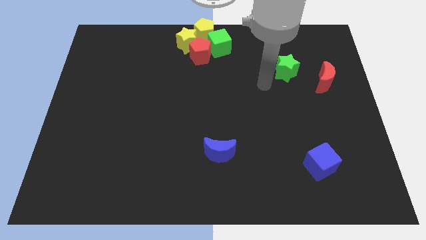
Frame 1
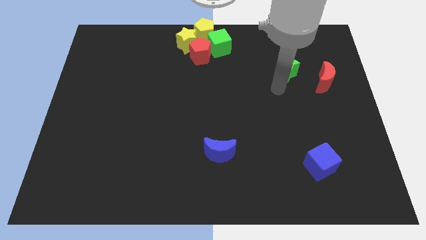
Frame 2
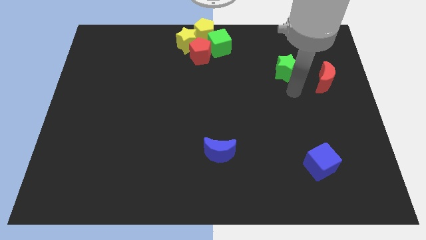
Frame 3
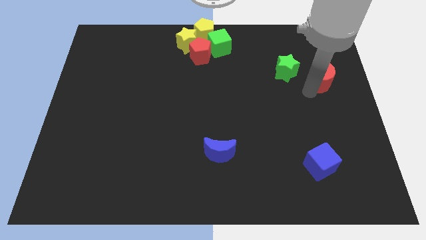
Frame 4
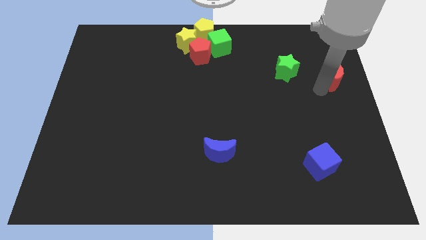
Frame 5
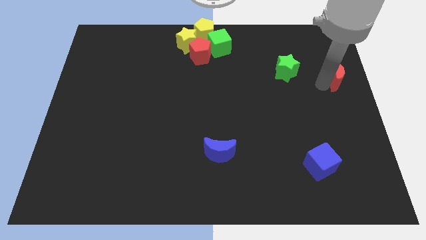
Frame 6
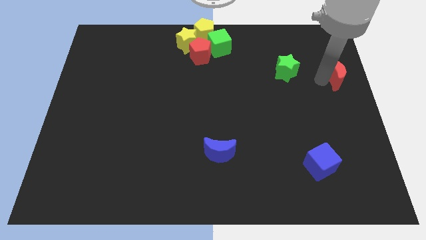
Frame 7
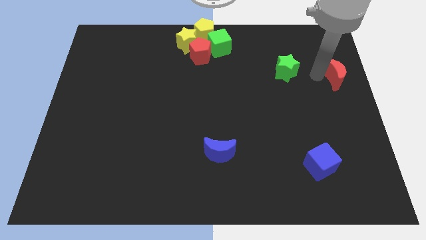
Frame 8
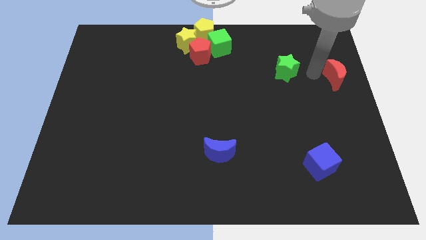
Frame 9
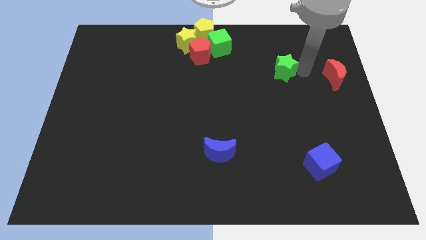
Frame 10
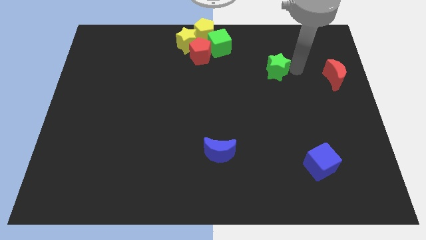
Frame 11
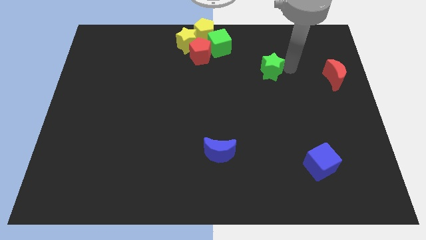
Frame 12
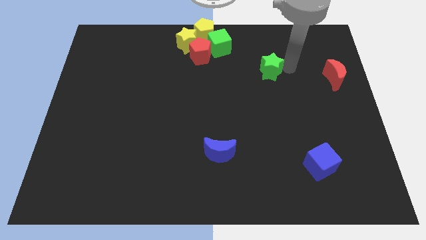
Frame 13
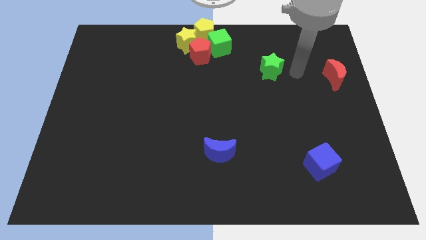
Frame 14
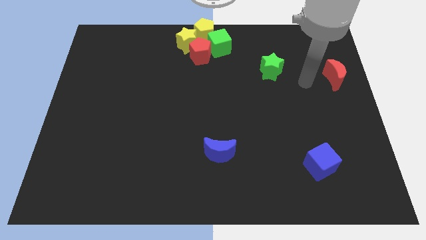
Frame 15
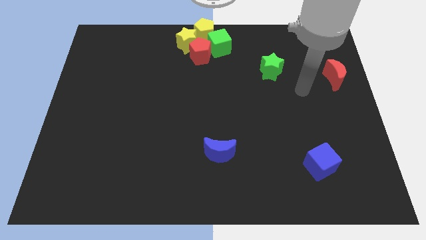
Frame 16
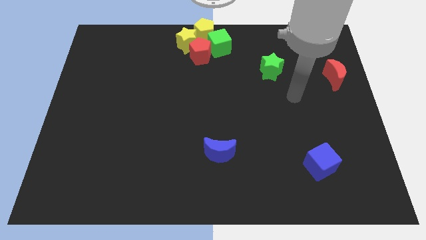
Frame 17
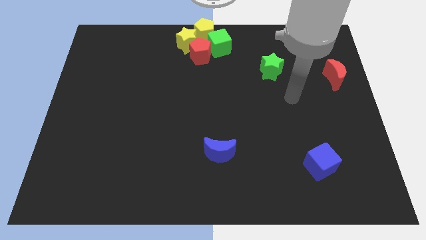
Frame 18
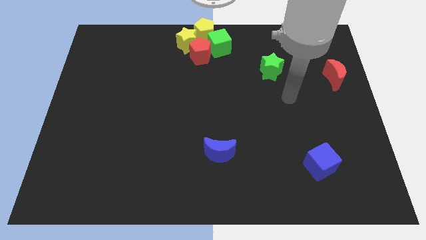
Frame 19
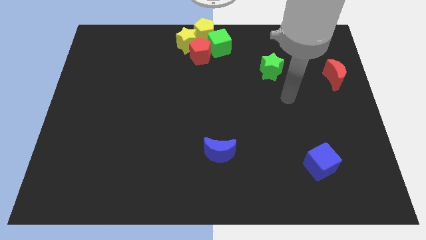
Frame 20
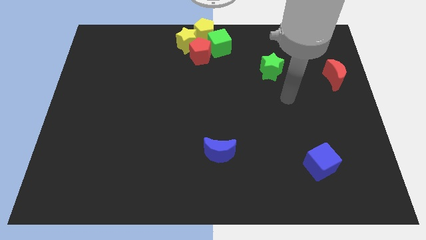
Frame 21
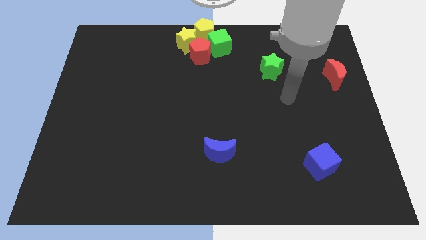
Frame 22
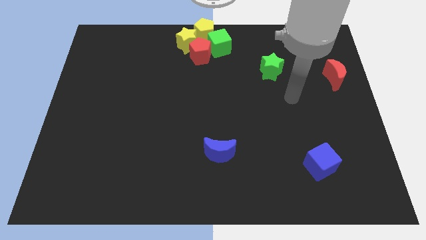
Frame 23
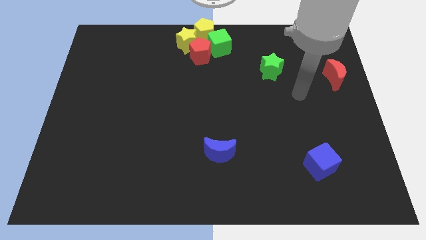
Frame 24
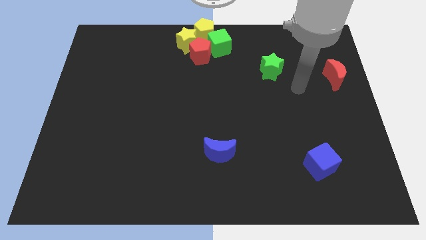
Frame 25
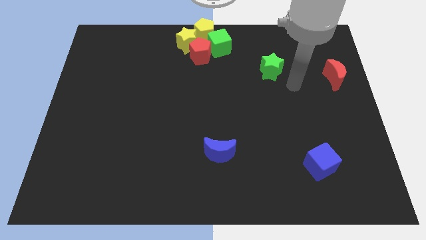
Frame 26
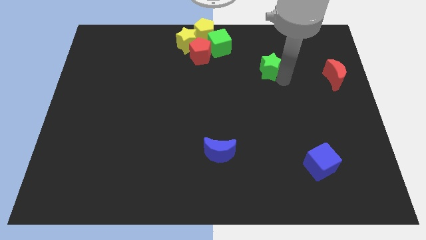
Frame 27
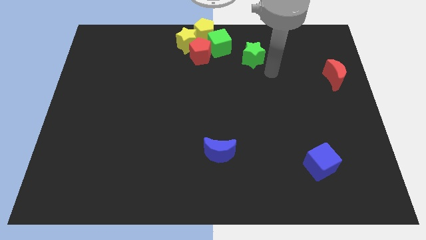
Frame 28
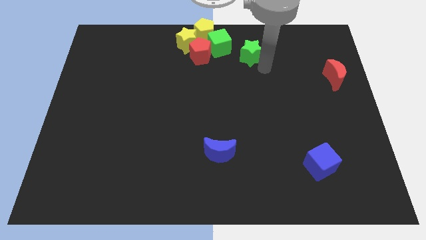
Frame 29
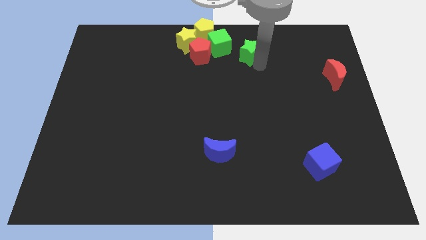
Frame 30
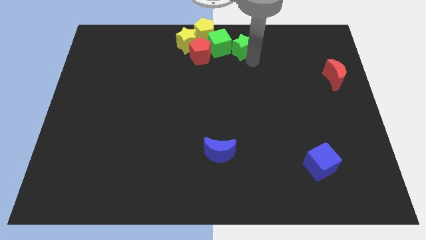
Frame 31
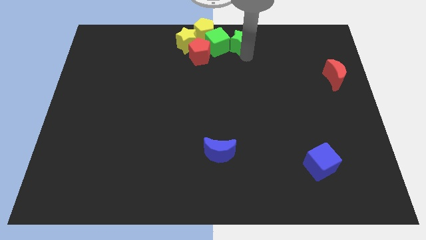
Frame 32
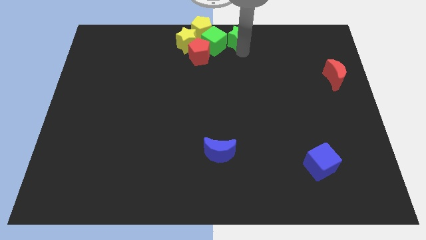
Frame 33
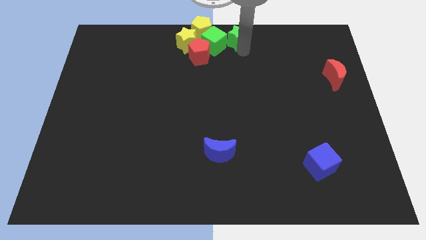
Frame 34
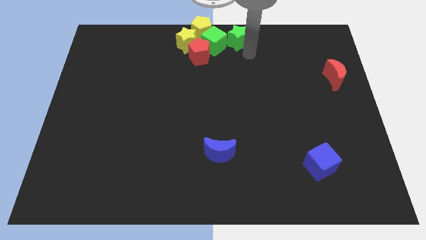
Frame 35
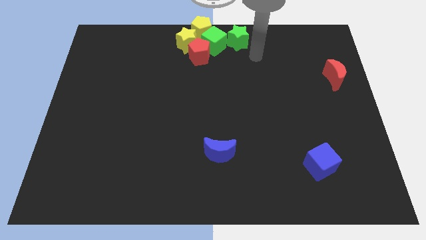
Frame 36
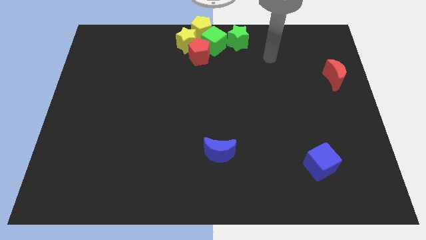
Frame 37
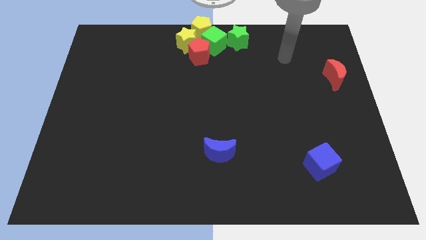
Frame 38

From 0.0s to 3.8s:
push green star in to green cube

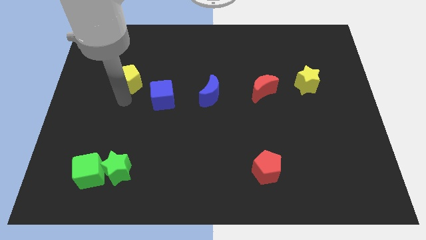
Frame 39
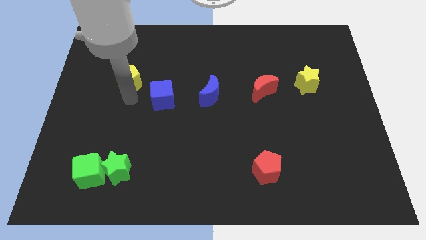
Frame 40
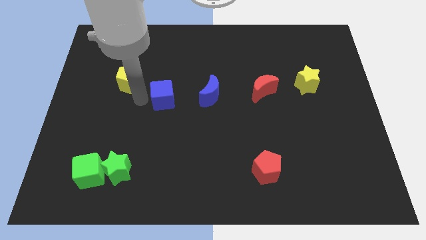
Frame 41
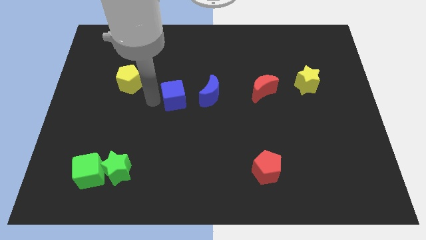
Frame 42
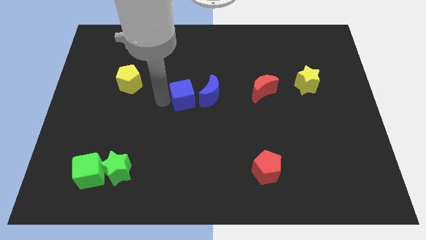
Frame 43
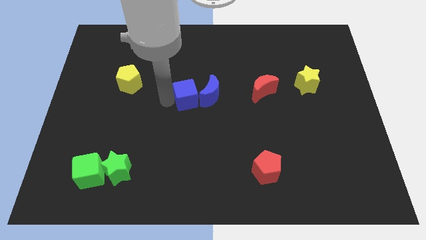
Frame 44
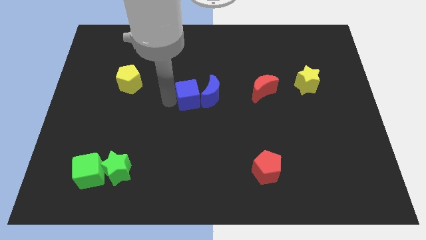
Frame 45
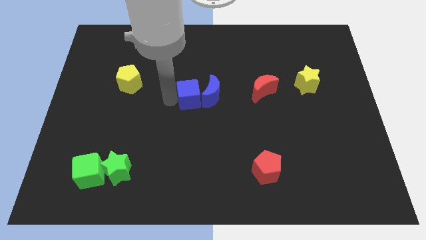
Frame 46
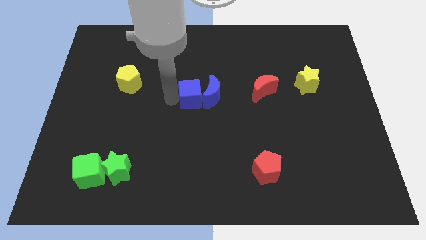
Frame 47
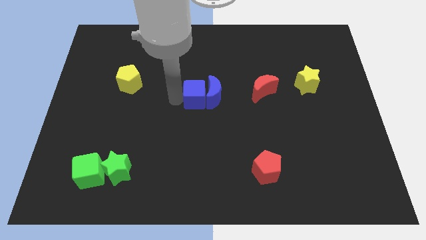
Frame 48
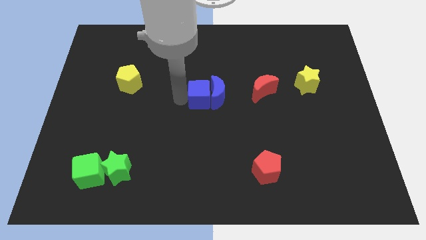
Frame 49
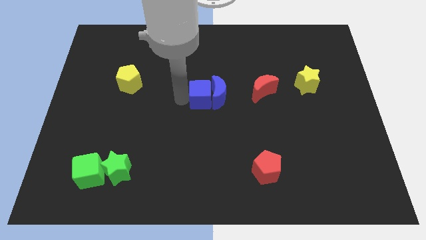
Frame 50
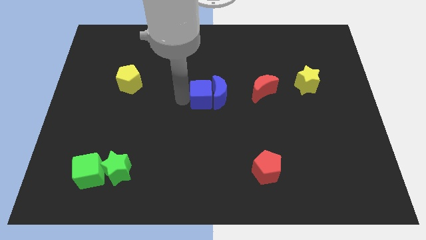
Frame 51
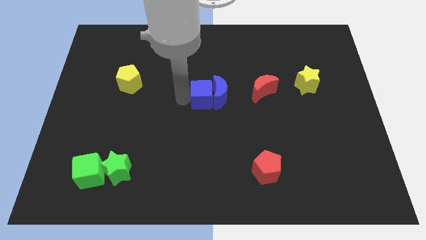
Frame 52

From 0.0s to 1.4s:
move the blue cube into the blue crescent

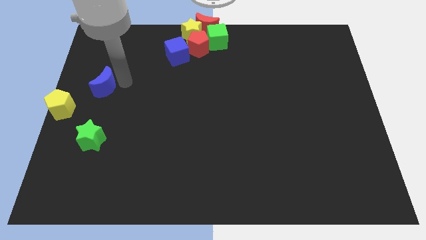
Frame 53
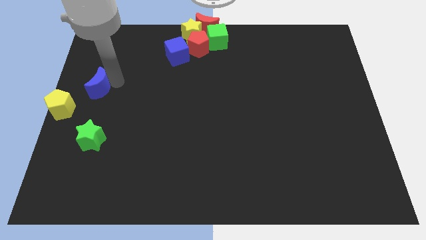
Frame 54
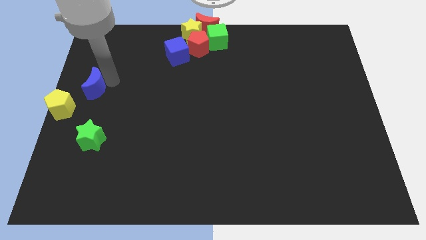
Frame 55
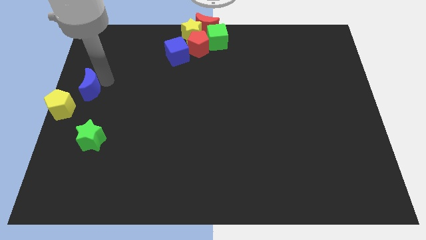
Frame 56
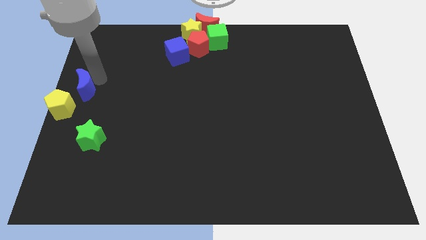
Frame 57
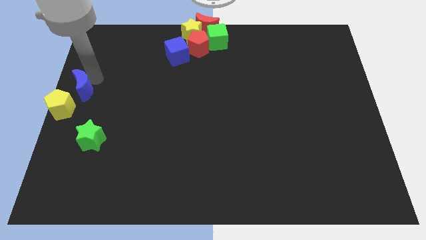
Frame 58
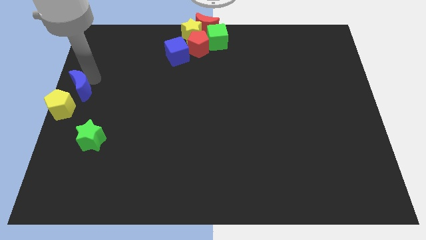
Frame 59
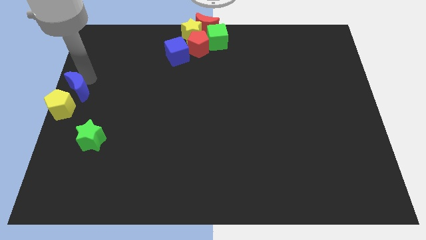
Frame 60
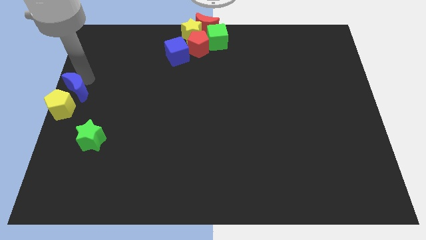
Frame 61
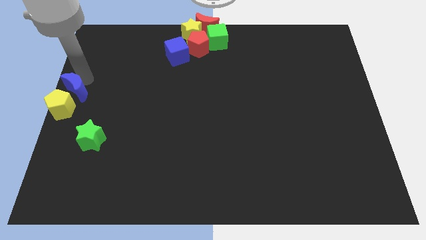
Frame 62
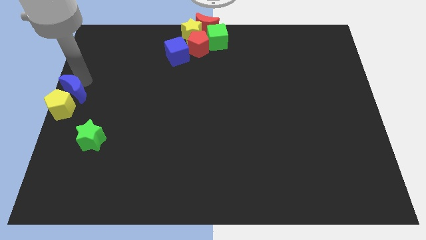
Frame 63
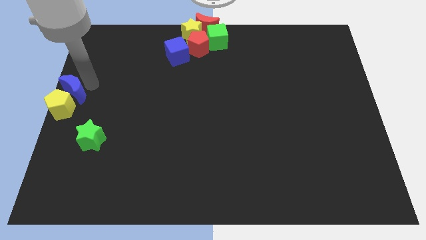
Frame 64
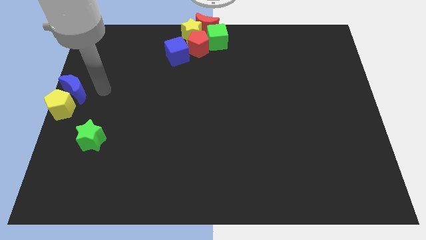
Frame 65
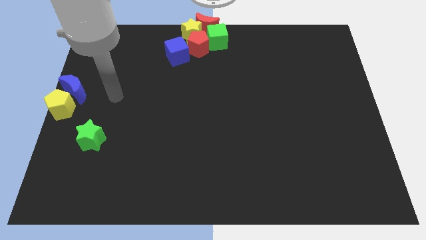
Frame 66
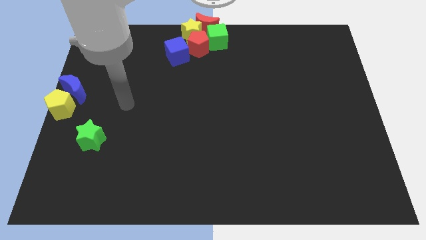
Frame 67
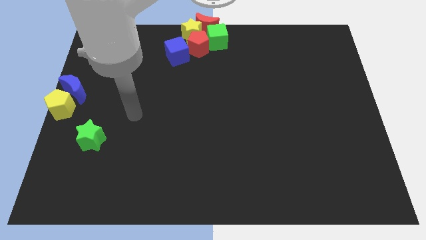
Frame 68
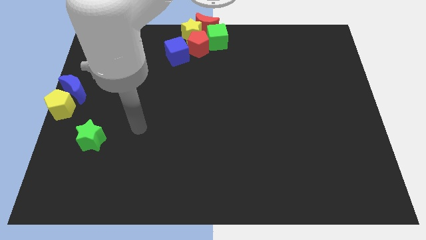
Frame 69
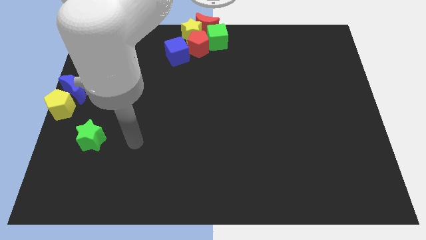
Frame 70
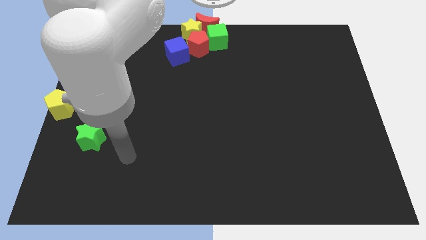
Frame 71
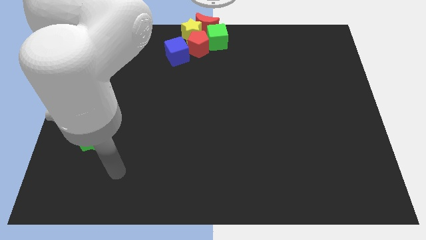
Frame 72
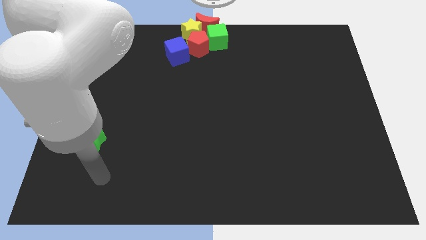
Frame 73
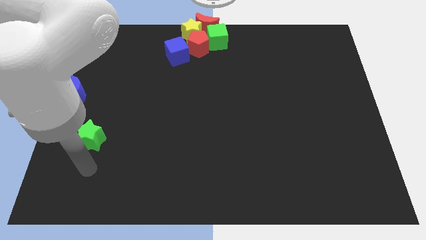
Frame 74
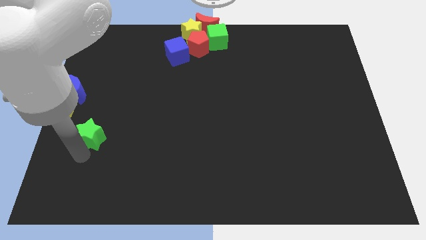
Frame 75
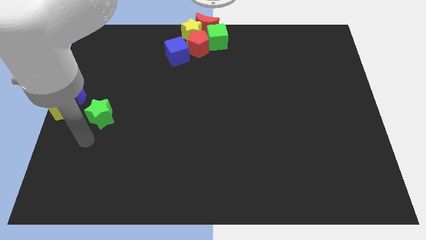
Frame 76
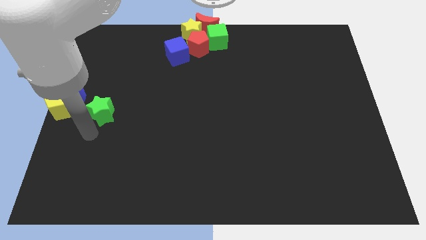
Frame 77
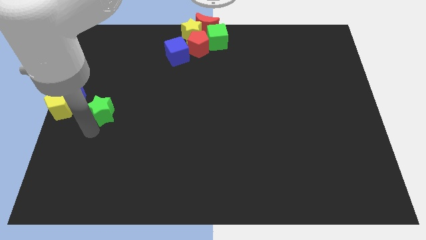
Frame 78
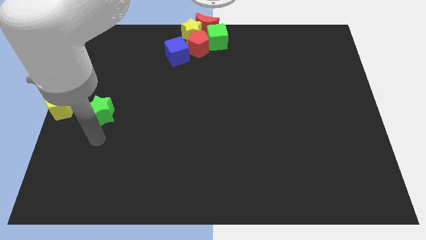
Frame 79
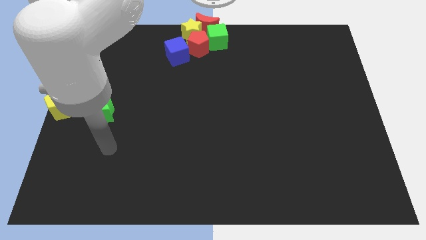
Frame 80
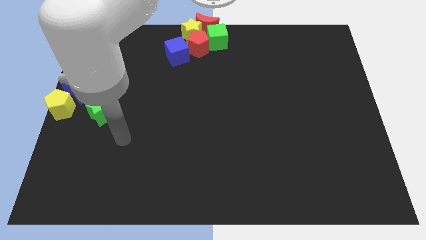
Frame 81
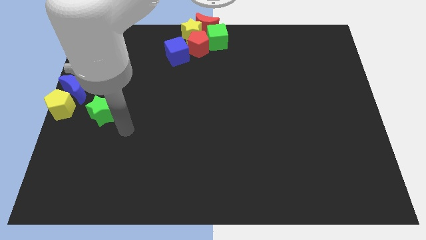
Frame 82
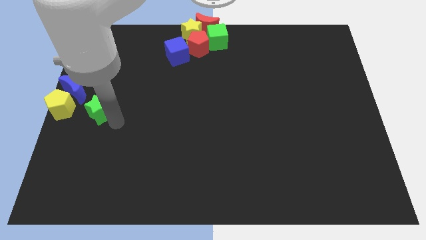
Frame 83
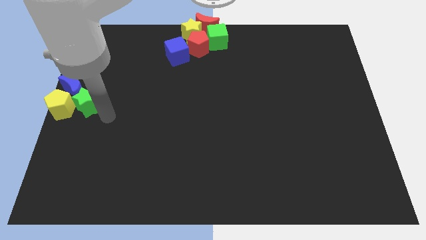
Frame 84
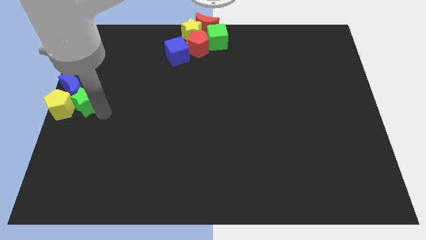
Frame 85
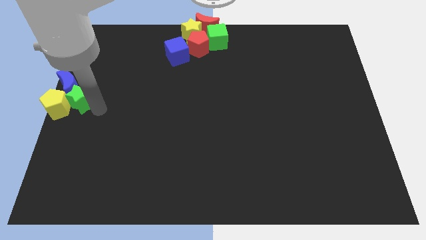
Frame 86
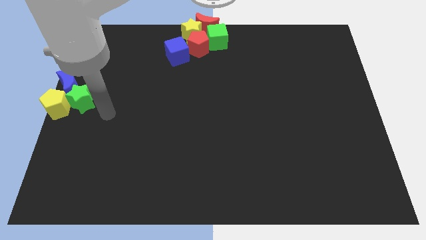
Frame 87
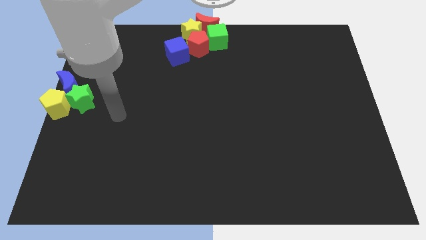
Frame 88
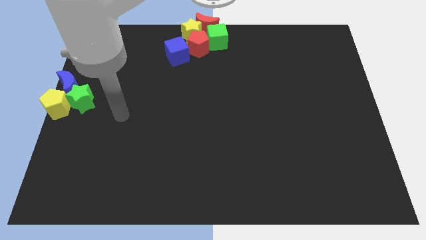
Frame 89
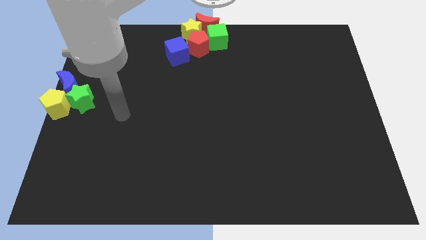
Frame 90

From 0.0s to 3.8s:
move green yellow blue blocks to the left side of the board

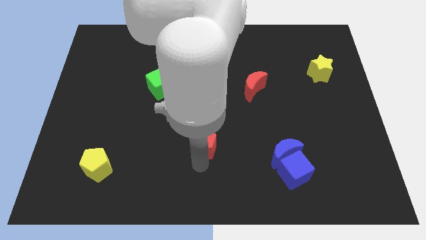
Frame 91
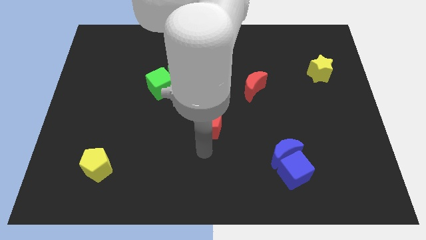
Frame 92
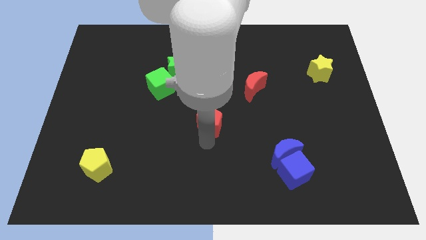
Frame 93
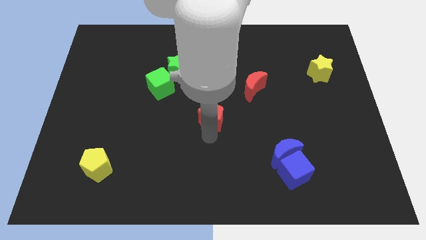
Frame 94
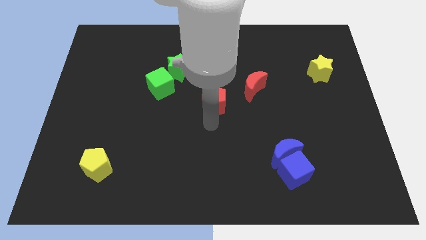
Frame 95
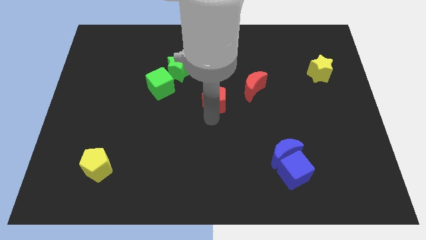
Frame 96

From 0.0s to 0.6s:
move the red pentagon towards the center of the board
